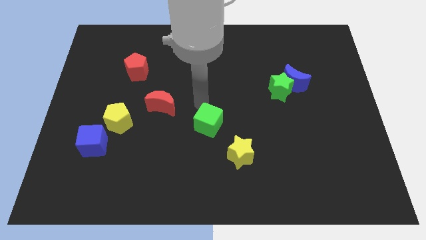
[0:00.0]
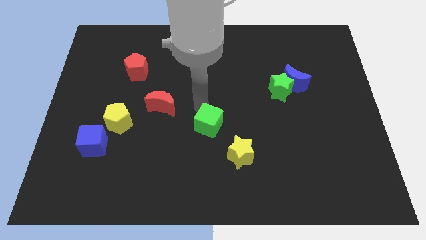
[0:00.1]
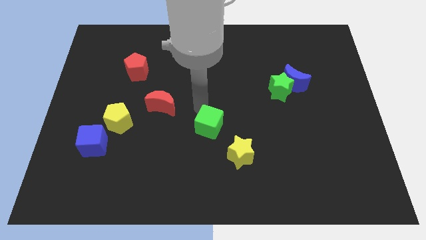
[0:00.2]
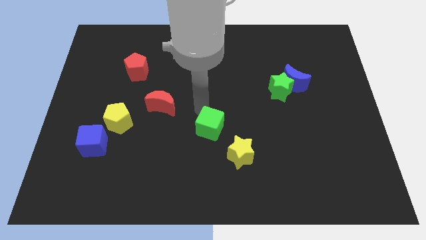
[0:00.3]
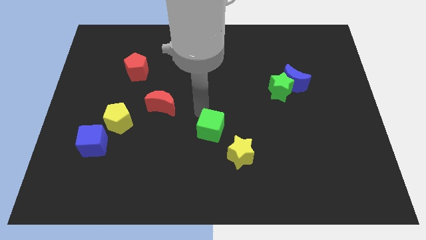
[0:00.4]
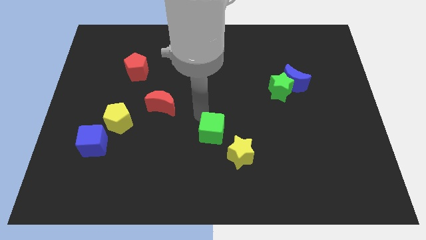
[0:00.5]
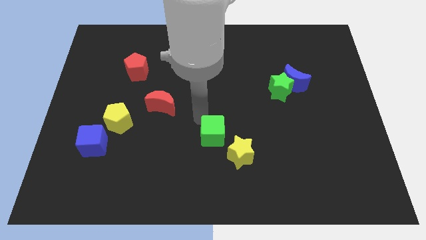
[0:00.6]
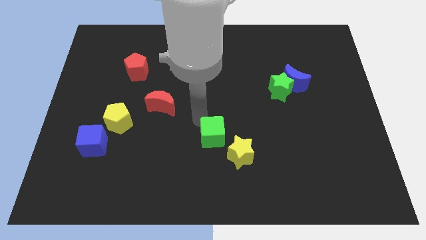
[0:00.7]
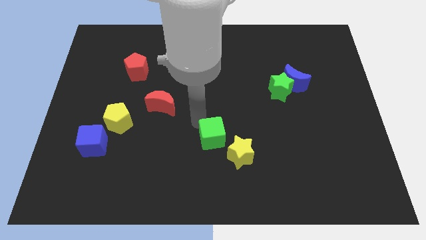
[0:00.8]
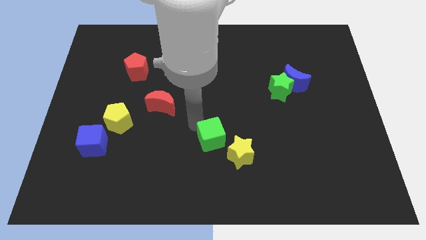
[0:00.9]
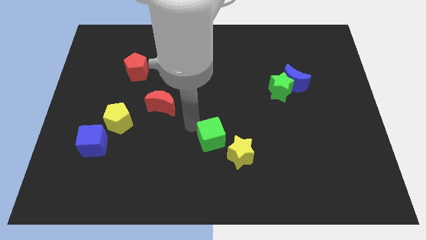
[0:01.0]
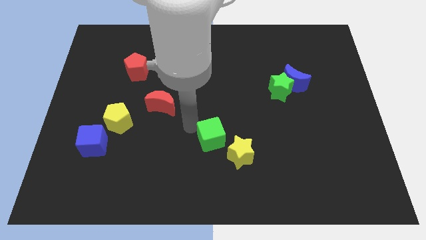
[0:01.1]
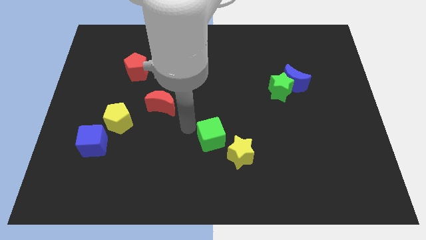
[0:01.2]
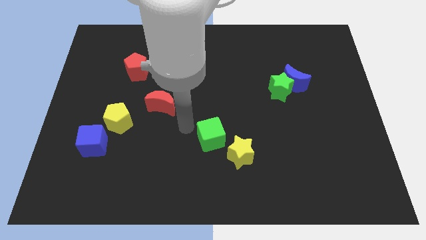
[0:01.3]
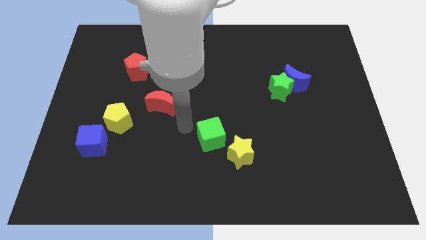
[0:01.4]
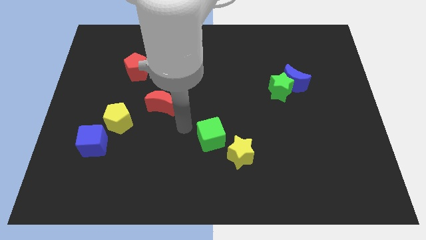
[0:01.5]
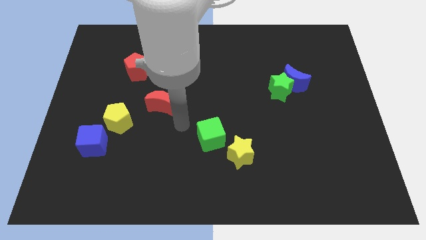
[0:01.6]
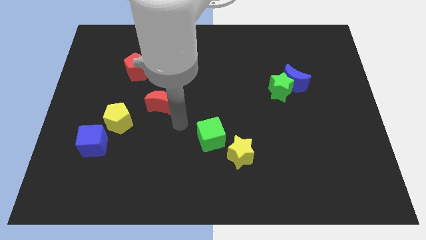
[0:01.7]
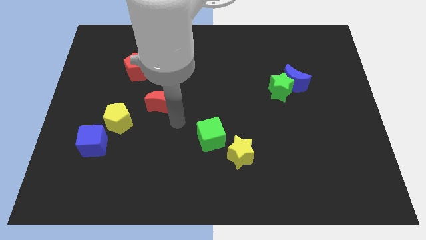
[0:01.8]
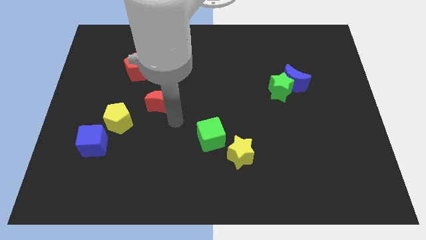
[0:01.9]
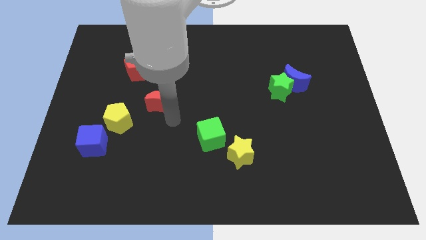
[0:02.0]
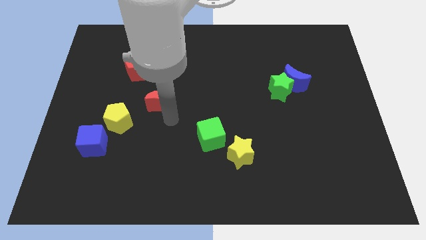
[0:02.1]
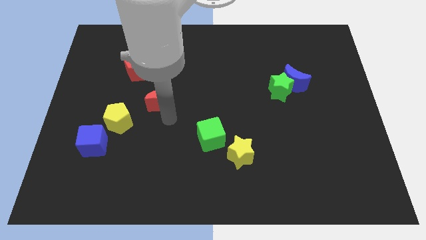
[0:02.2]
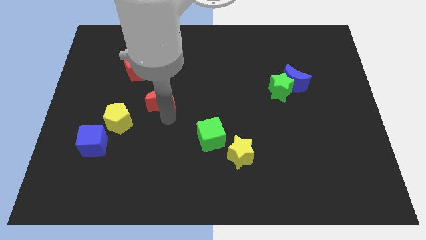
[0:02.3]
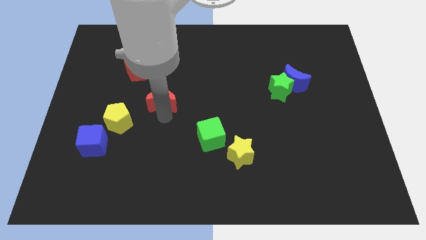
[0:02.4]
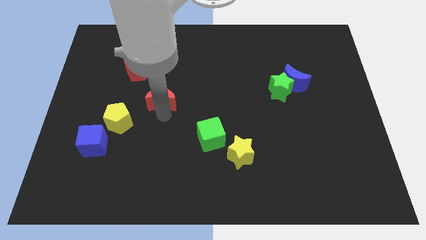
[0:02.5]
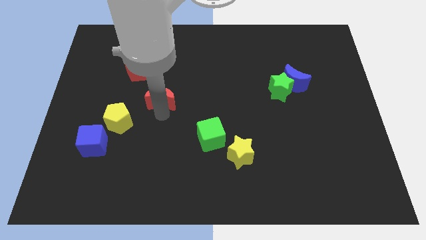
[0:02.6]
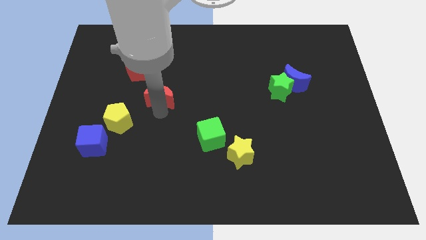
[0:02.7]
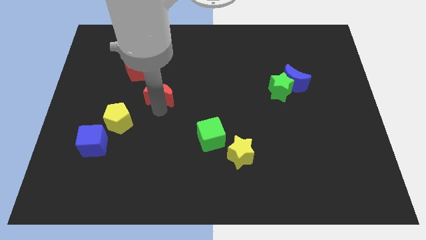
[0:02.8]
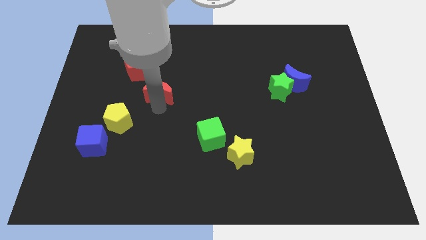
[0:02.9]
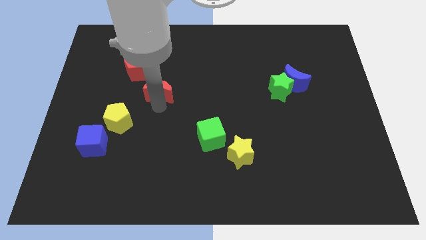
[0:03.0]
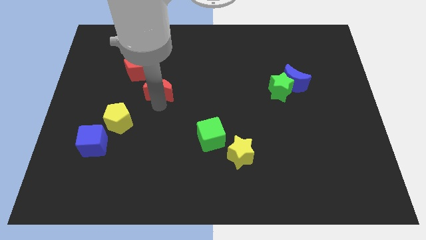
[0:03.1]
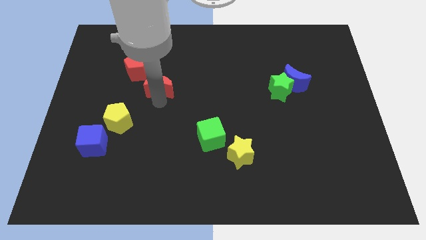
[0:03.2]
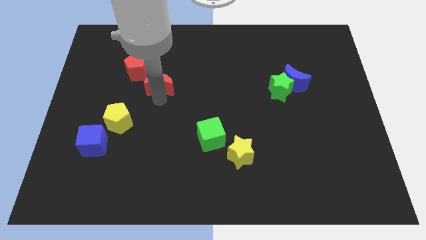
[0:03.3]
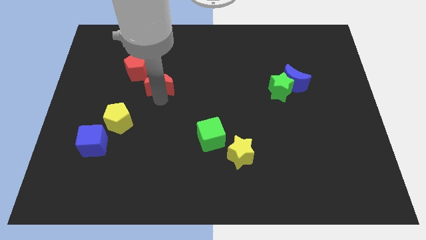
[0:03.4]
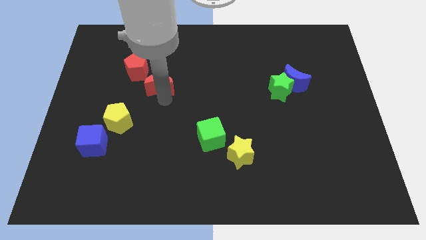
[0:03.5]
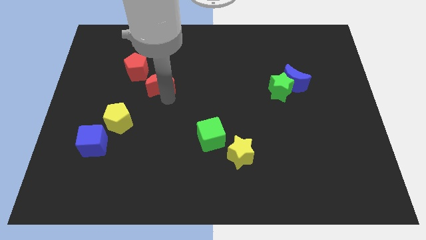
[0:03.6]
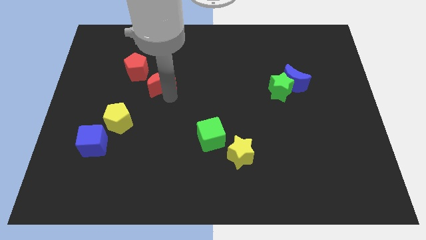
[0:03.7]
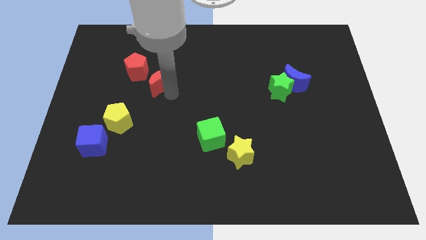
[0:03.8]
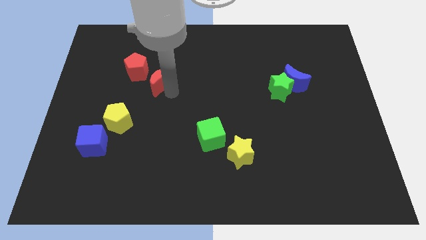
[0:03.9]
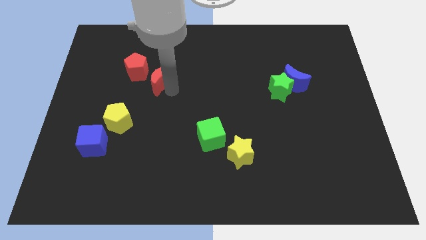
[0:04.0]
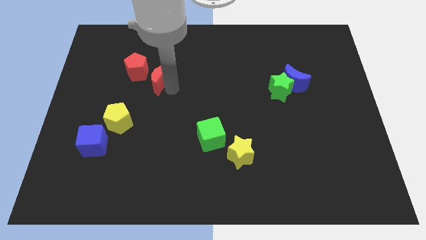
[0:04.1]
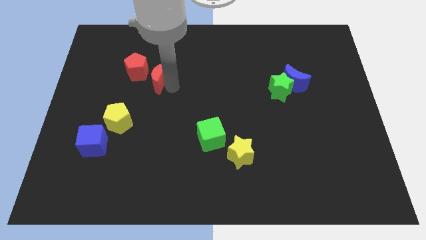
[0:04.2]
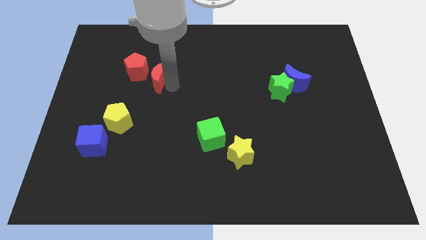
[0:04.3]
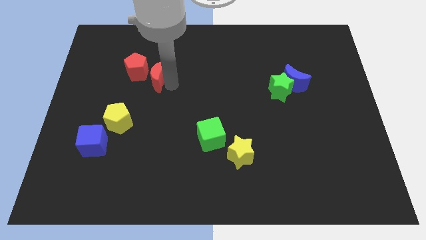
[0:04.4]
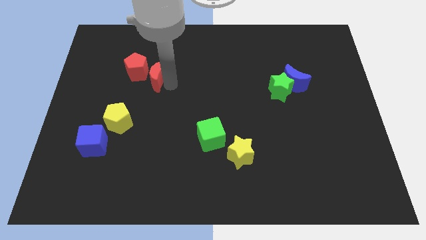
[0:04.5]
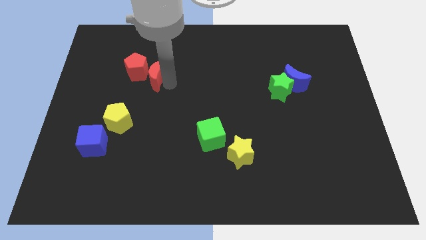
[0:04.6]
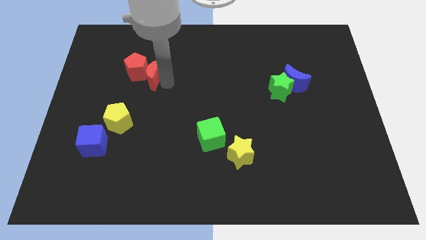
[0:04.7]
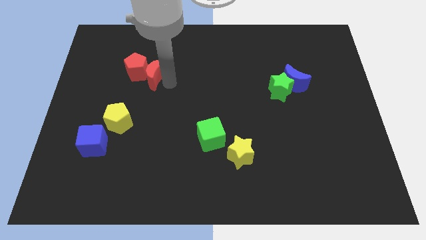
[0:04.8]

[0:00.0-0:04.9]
move red crescent close to red pentagon

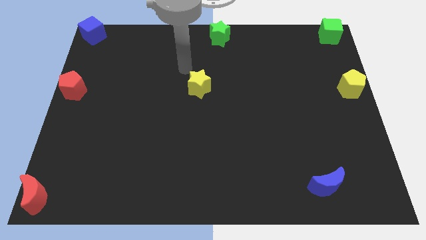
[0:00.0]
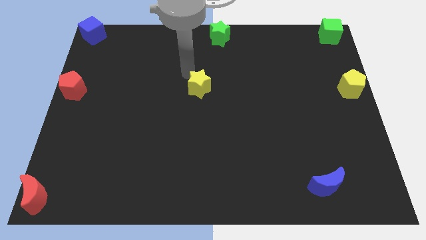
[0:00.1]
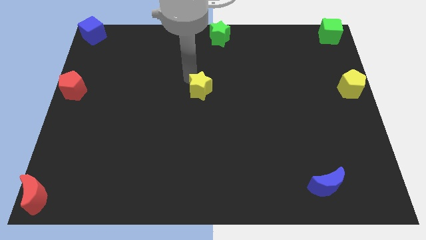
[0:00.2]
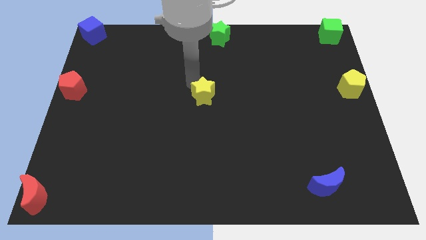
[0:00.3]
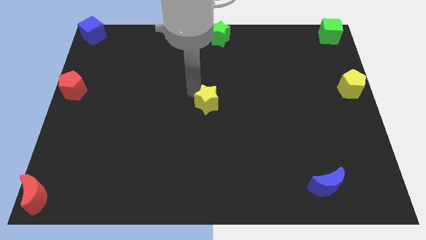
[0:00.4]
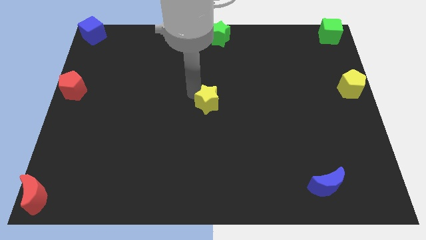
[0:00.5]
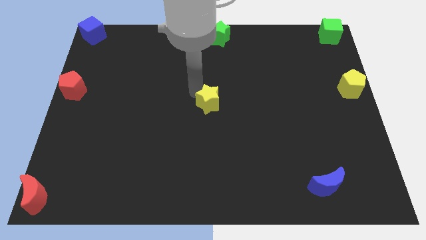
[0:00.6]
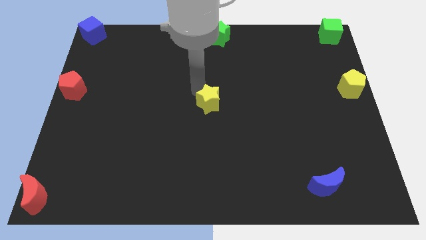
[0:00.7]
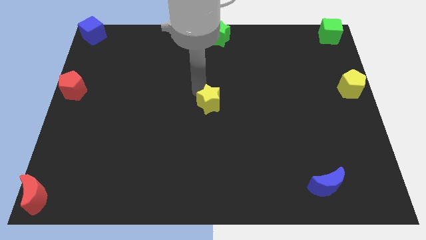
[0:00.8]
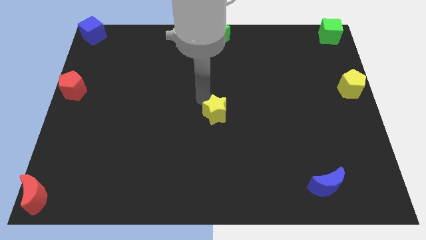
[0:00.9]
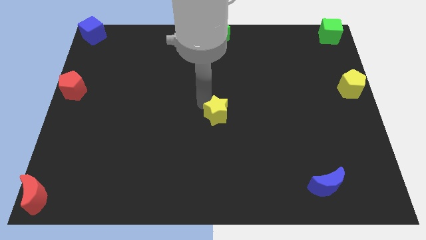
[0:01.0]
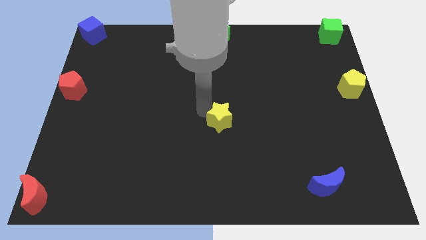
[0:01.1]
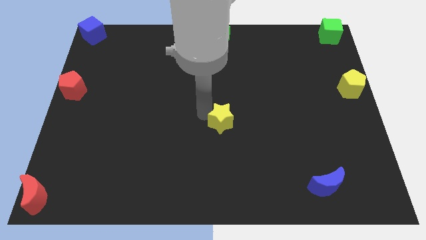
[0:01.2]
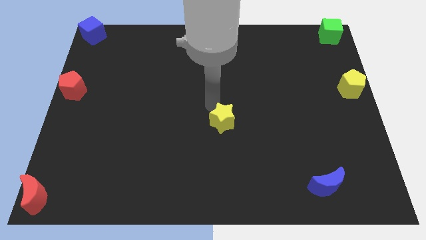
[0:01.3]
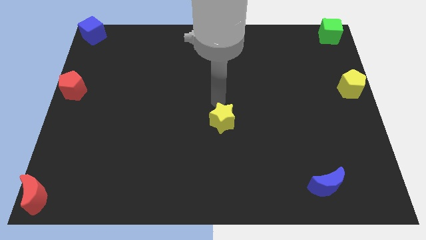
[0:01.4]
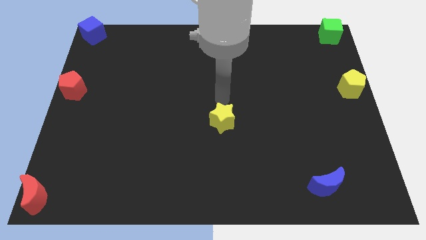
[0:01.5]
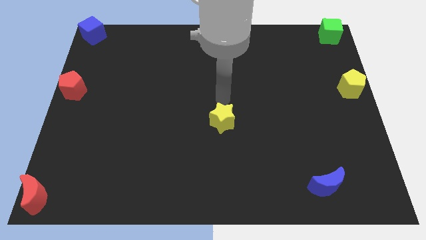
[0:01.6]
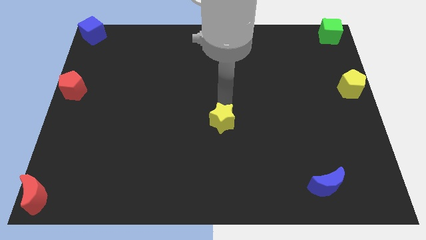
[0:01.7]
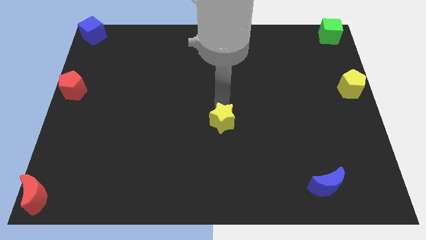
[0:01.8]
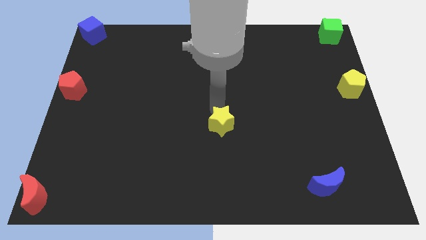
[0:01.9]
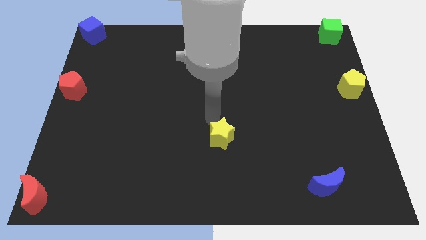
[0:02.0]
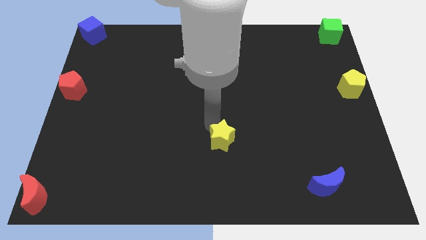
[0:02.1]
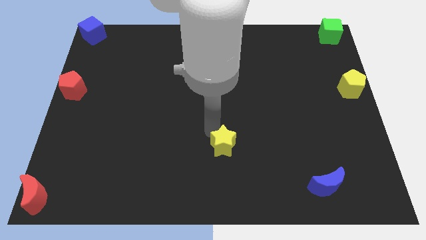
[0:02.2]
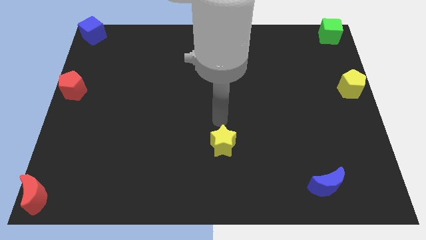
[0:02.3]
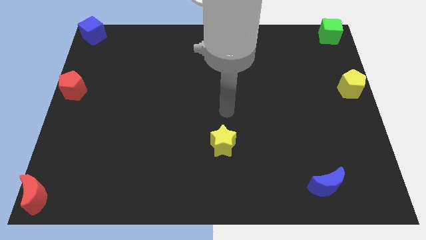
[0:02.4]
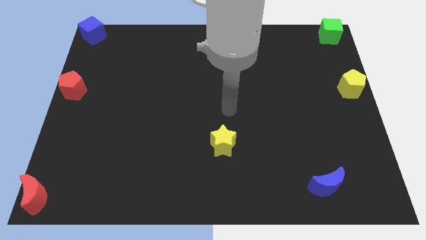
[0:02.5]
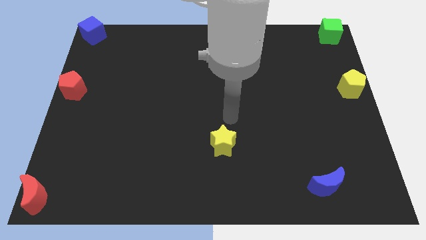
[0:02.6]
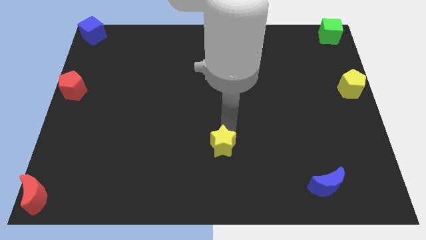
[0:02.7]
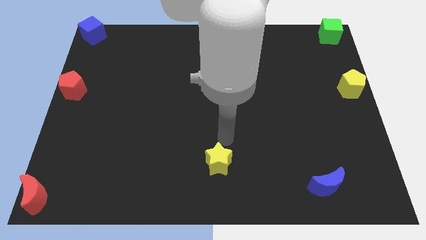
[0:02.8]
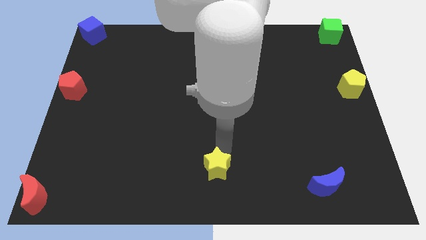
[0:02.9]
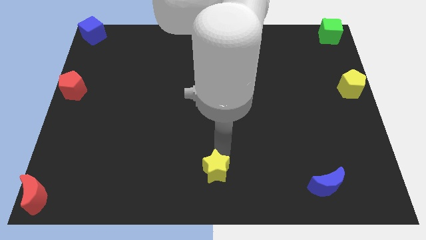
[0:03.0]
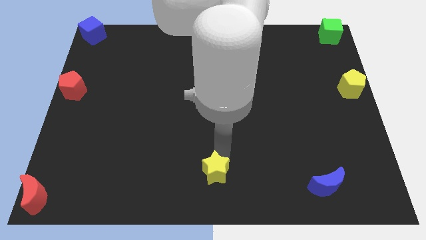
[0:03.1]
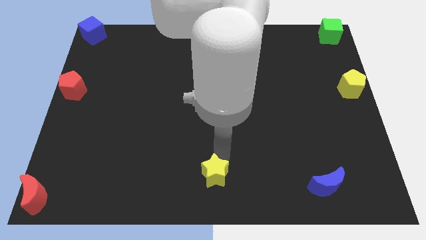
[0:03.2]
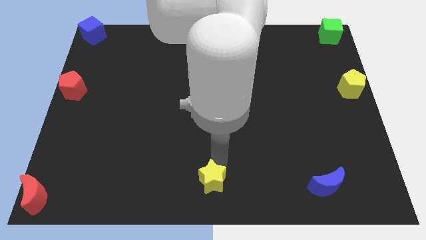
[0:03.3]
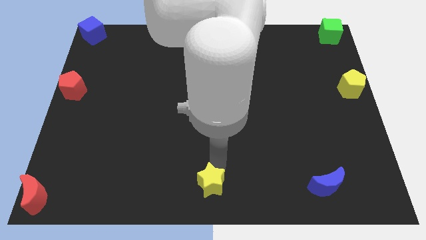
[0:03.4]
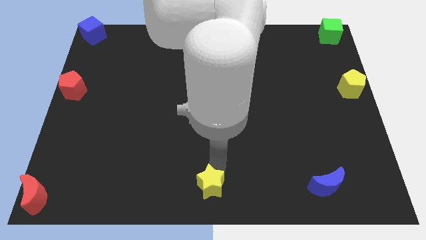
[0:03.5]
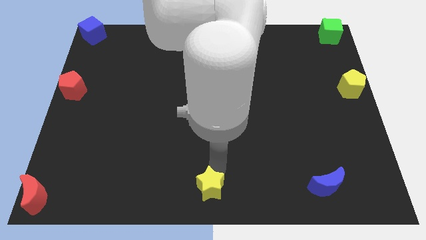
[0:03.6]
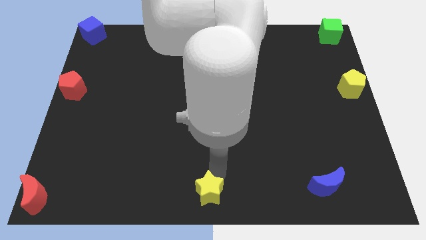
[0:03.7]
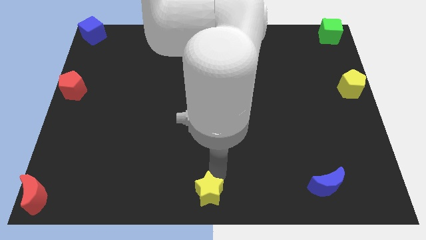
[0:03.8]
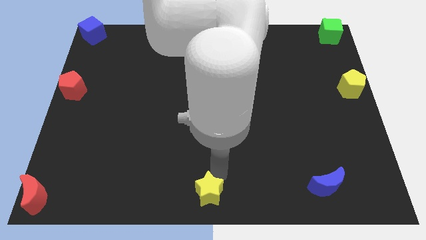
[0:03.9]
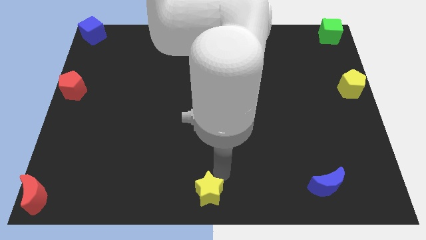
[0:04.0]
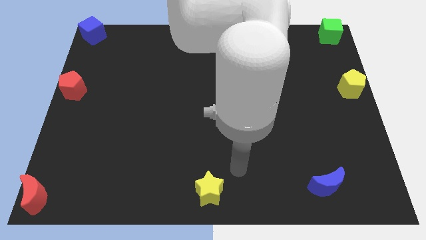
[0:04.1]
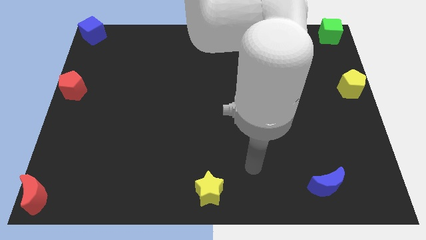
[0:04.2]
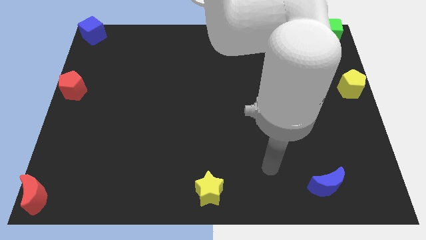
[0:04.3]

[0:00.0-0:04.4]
push the yellow star to the bottom center of the board
